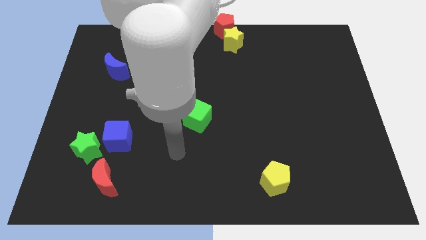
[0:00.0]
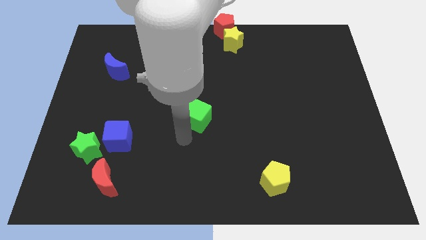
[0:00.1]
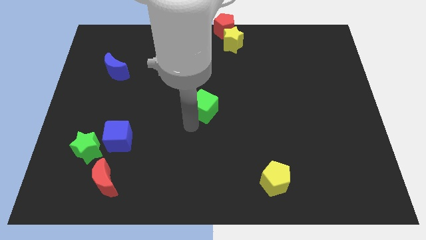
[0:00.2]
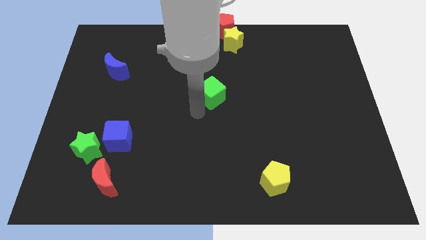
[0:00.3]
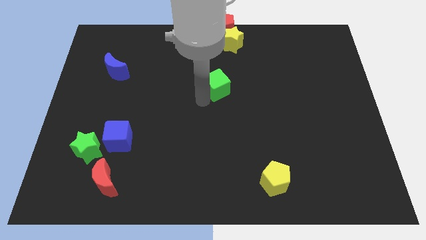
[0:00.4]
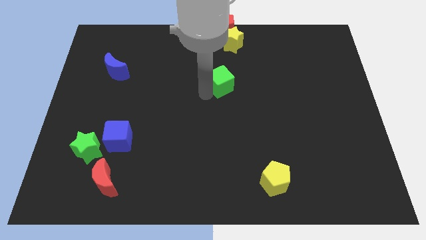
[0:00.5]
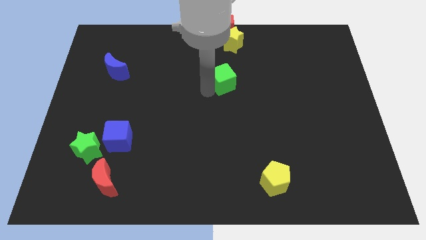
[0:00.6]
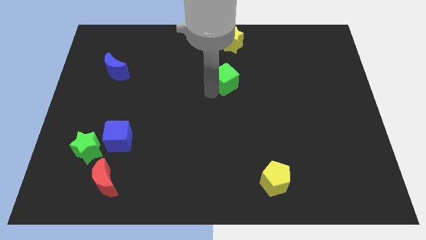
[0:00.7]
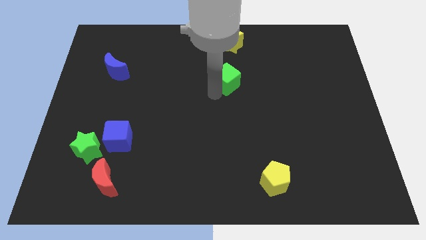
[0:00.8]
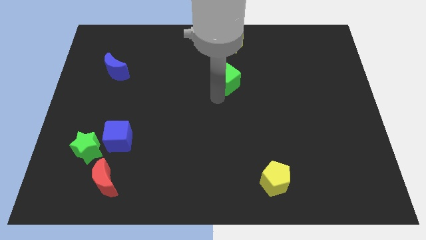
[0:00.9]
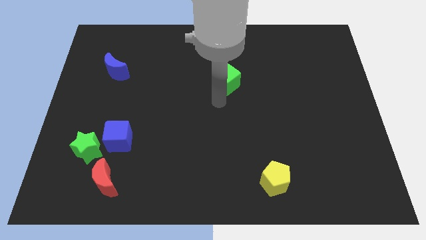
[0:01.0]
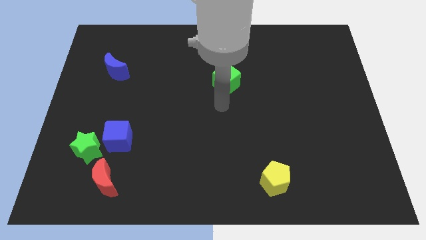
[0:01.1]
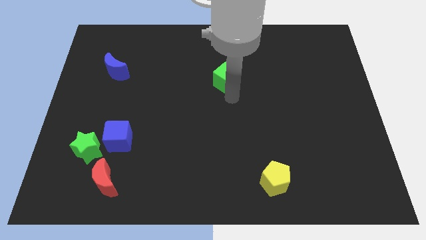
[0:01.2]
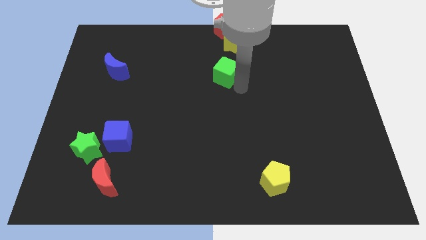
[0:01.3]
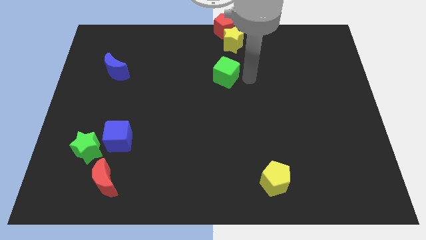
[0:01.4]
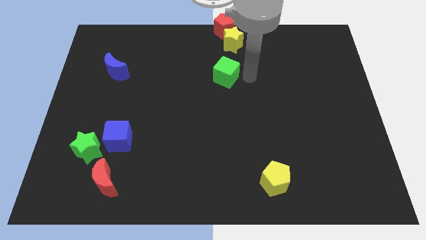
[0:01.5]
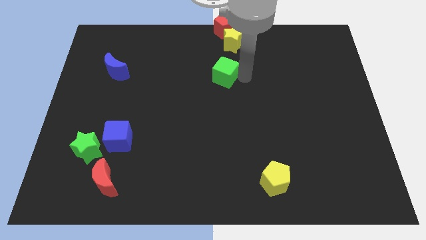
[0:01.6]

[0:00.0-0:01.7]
place the green cube below the yellow star

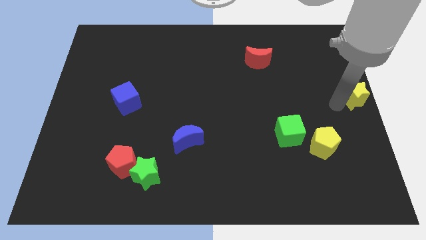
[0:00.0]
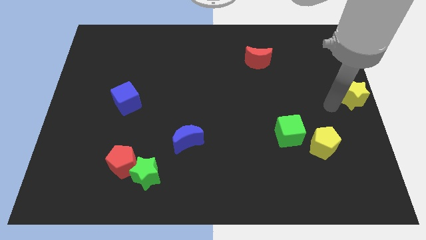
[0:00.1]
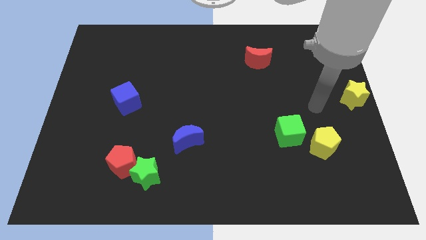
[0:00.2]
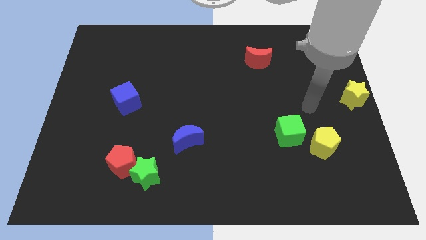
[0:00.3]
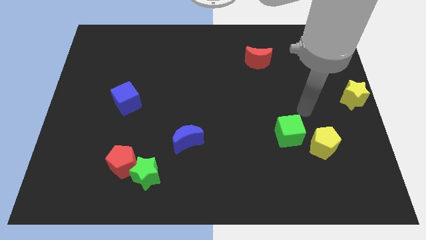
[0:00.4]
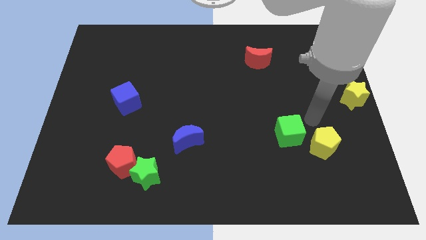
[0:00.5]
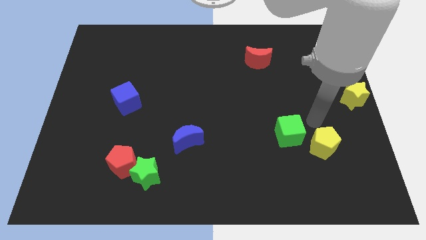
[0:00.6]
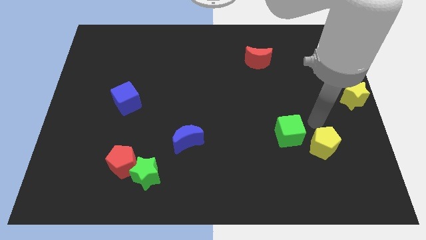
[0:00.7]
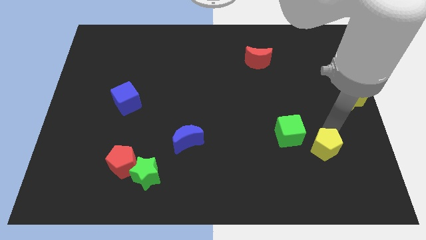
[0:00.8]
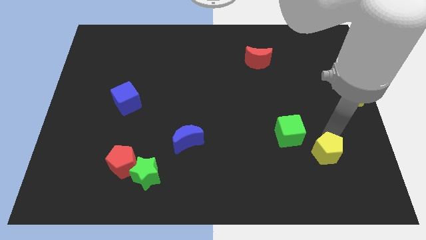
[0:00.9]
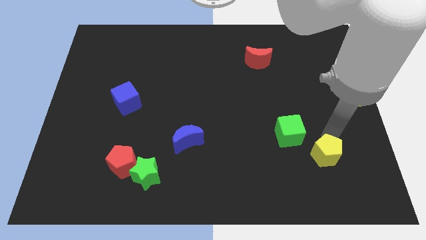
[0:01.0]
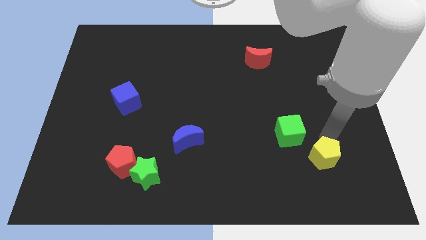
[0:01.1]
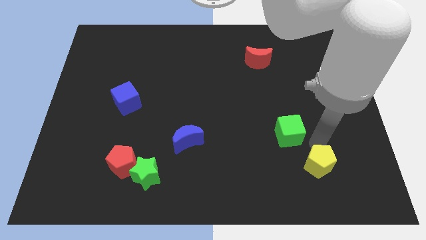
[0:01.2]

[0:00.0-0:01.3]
slightly move the yellow pentagon to the bottom of the board

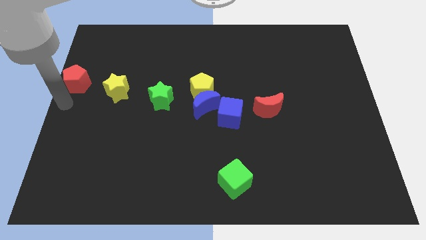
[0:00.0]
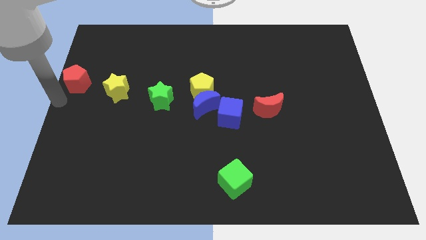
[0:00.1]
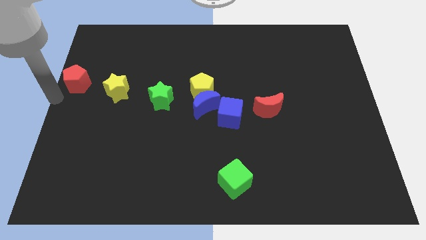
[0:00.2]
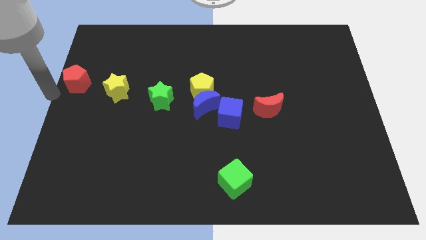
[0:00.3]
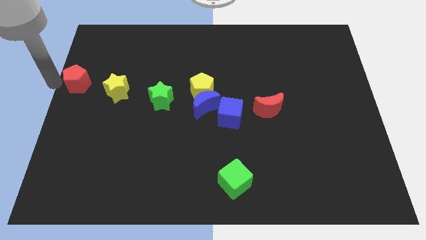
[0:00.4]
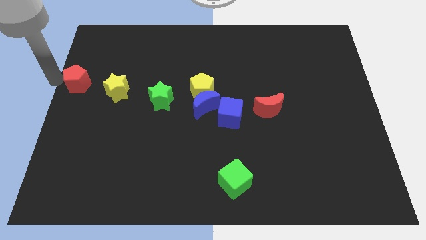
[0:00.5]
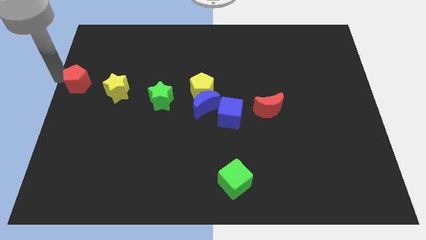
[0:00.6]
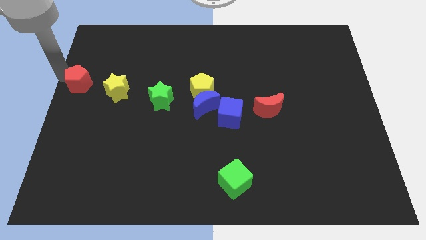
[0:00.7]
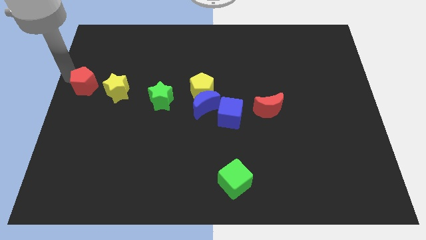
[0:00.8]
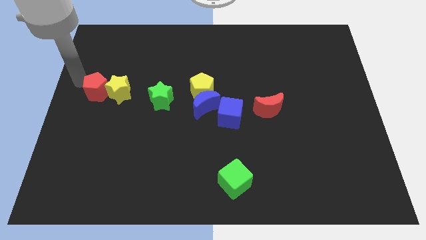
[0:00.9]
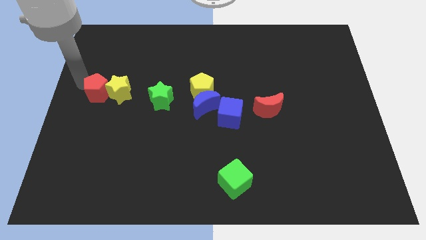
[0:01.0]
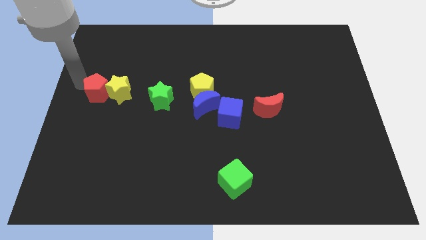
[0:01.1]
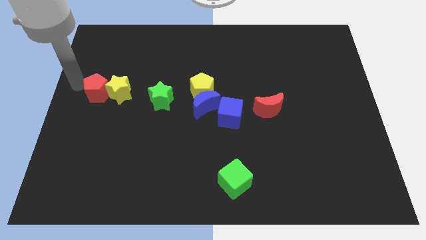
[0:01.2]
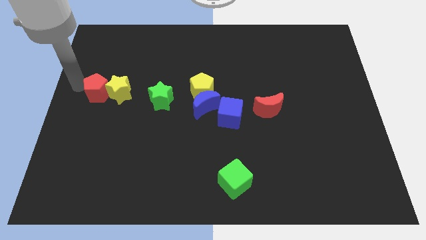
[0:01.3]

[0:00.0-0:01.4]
push the red pentagon into the yellow star

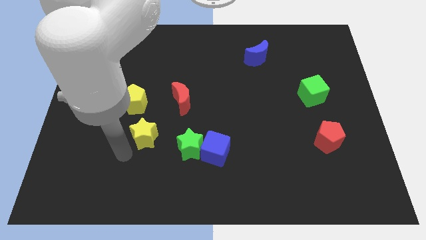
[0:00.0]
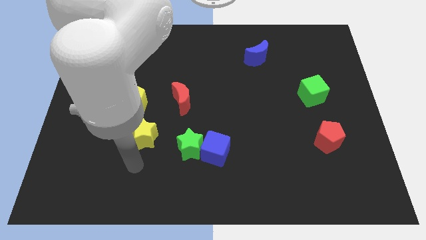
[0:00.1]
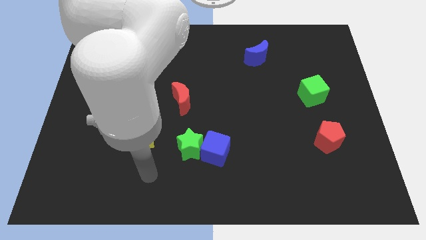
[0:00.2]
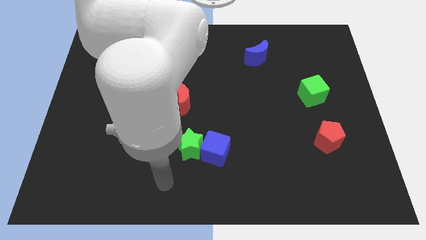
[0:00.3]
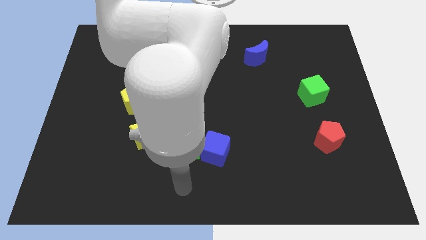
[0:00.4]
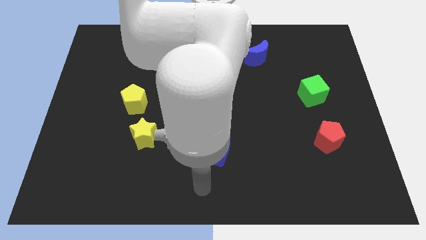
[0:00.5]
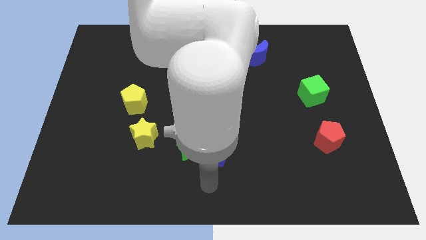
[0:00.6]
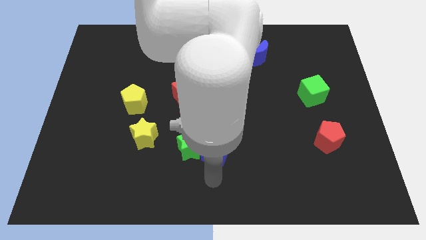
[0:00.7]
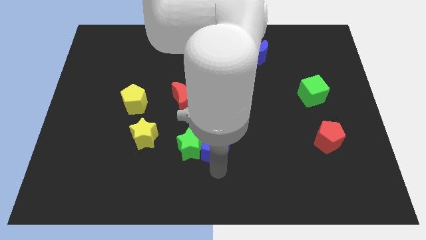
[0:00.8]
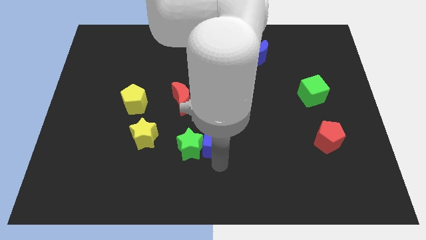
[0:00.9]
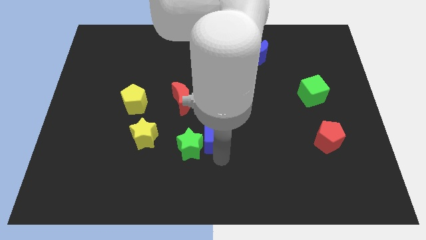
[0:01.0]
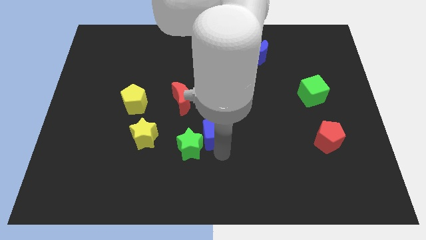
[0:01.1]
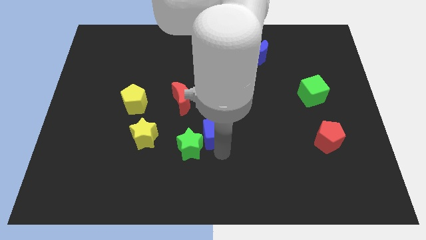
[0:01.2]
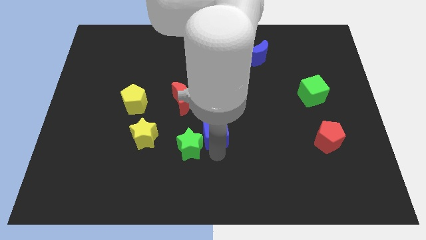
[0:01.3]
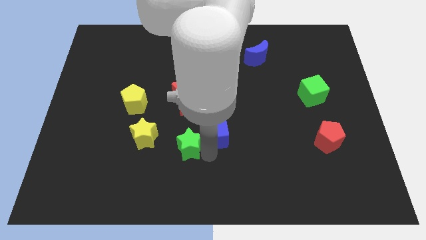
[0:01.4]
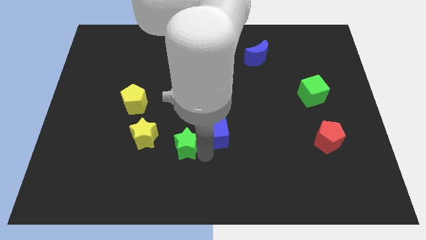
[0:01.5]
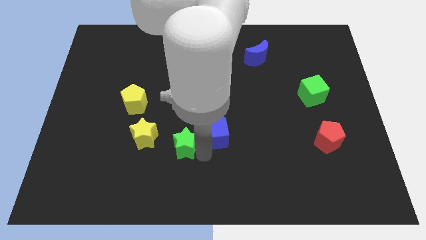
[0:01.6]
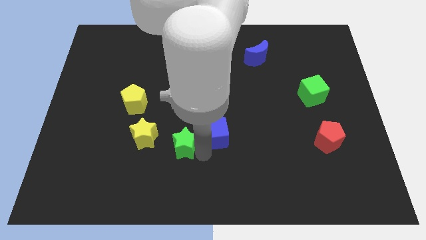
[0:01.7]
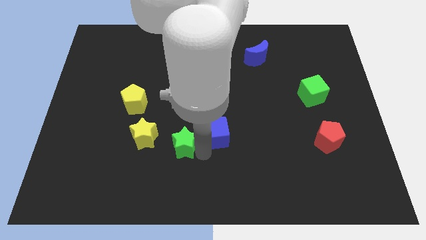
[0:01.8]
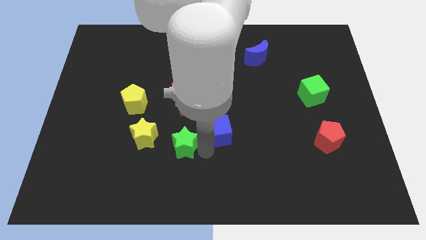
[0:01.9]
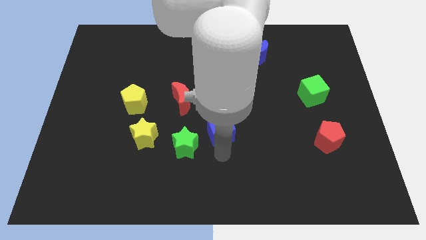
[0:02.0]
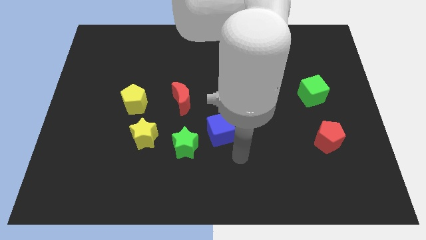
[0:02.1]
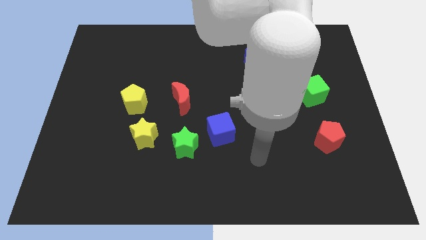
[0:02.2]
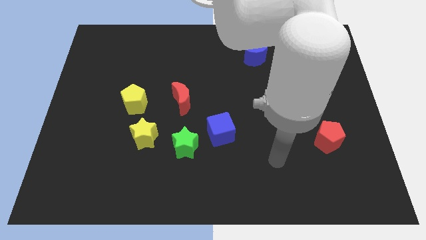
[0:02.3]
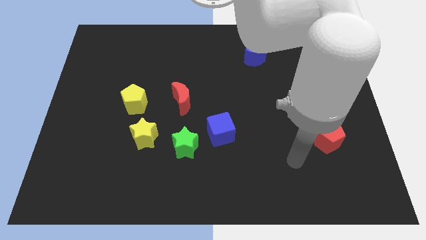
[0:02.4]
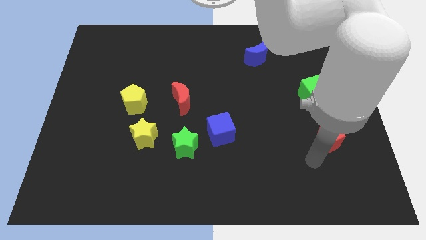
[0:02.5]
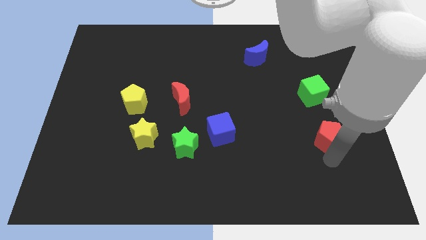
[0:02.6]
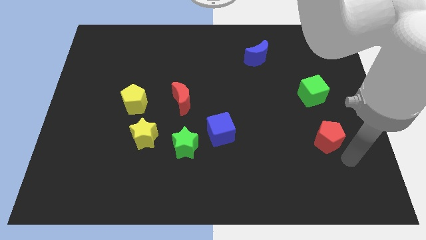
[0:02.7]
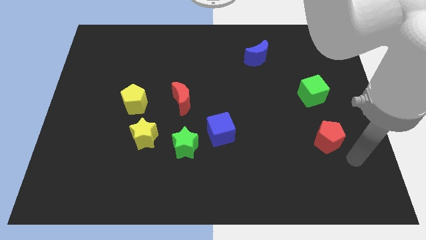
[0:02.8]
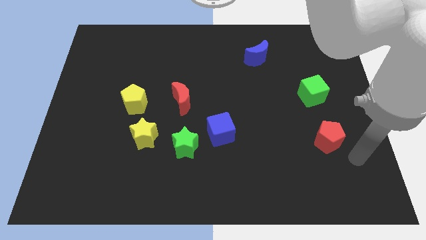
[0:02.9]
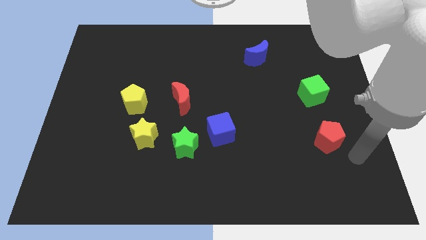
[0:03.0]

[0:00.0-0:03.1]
separate green star and blue cube

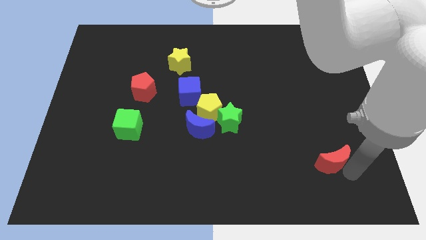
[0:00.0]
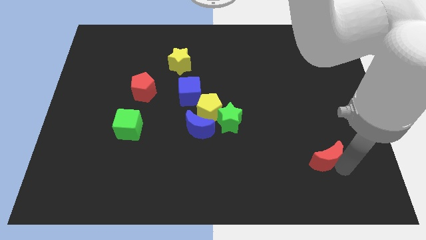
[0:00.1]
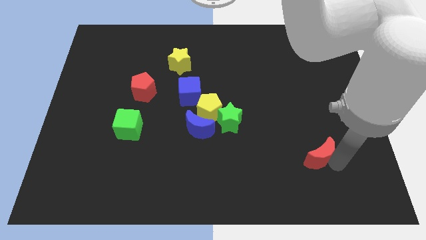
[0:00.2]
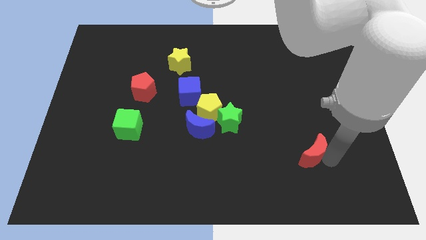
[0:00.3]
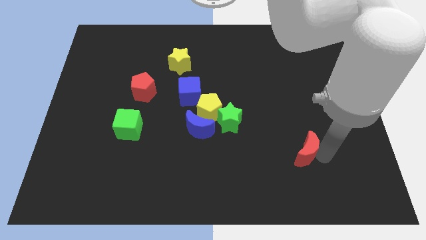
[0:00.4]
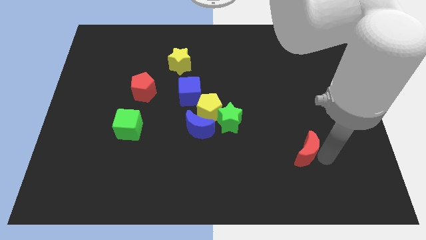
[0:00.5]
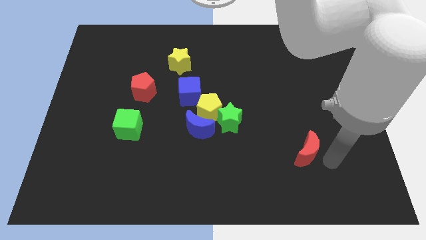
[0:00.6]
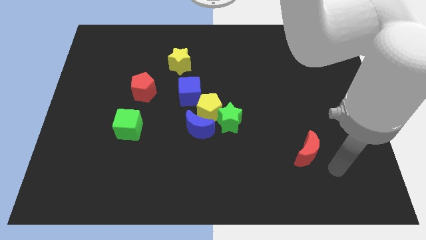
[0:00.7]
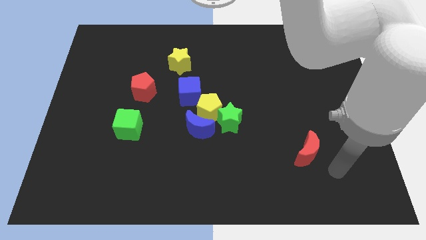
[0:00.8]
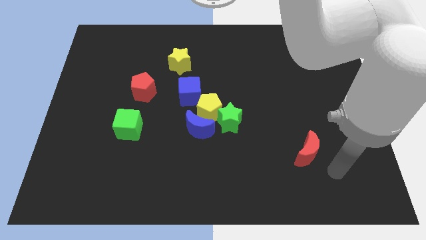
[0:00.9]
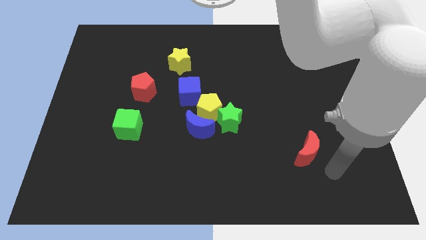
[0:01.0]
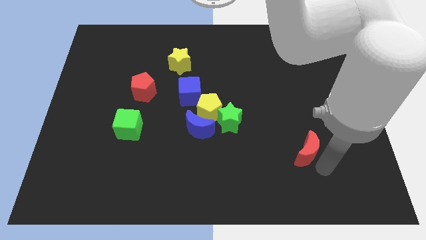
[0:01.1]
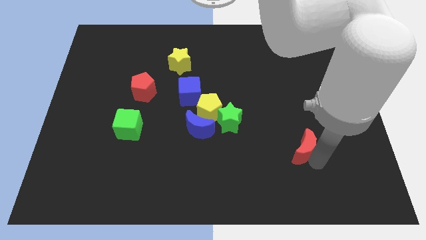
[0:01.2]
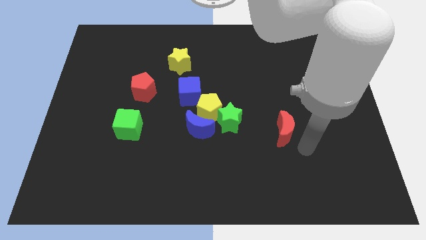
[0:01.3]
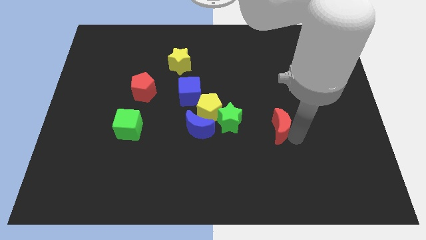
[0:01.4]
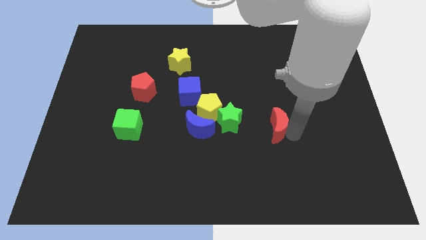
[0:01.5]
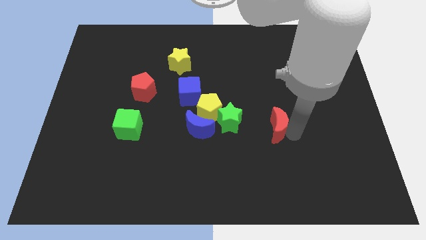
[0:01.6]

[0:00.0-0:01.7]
place the red moon parallel right to the green star
